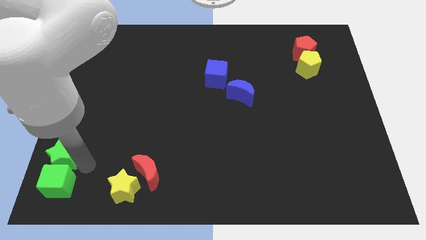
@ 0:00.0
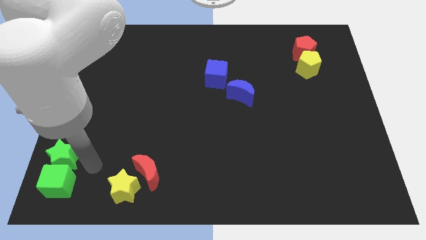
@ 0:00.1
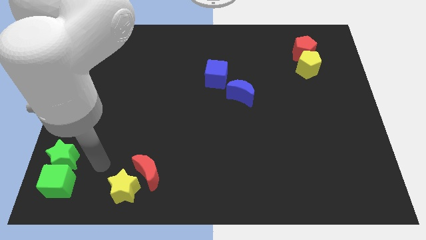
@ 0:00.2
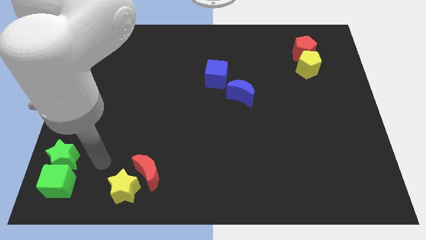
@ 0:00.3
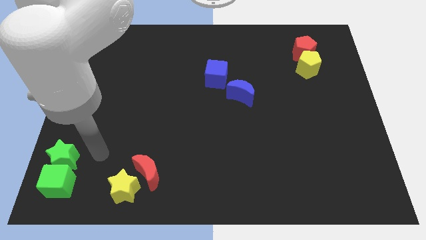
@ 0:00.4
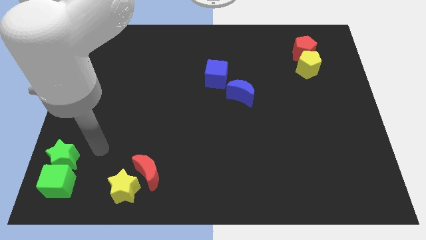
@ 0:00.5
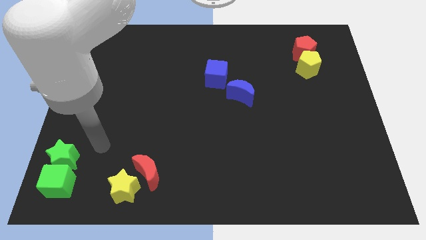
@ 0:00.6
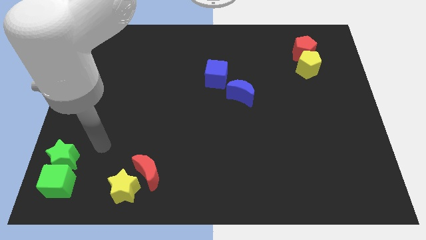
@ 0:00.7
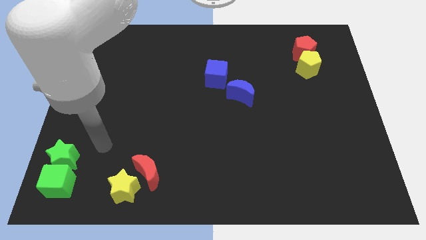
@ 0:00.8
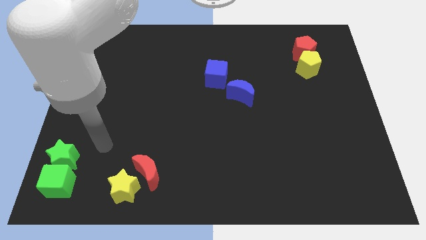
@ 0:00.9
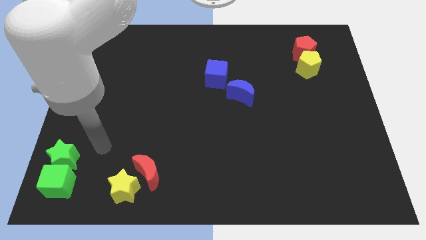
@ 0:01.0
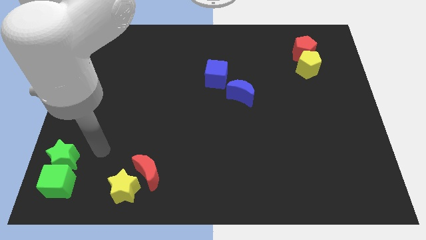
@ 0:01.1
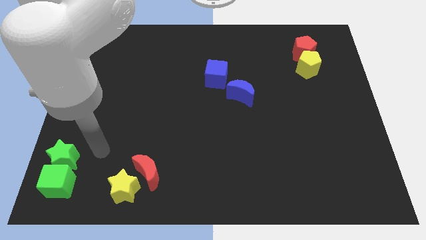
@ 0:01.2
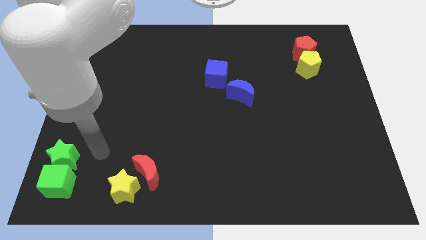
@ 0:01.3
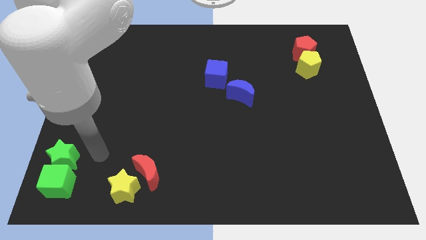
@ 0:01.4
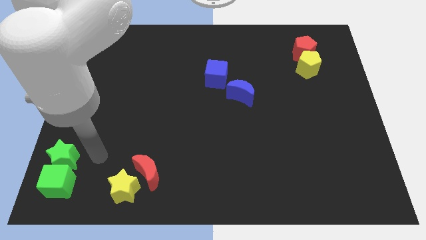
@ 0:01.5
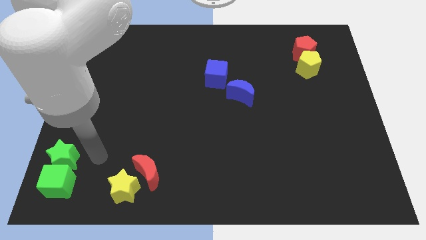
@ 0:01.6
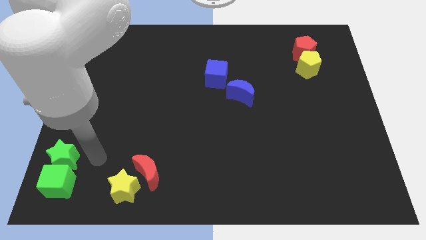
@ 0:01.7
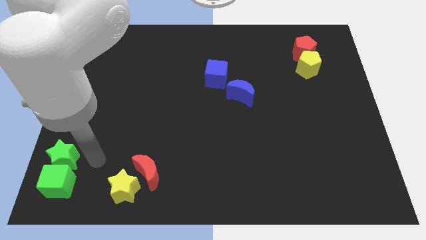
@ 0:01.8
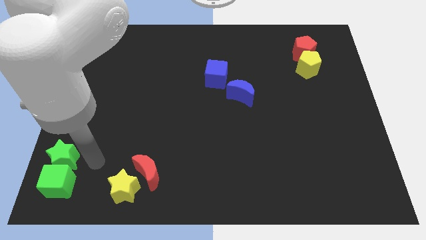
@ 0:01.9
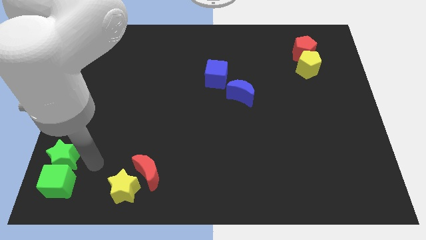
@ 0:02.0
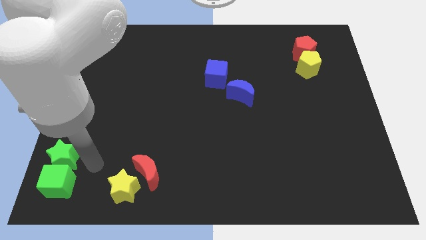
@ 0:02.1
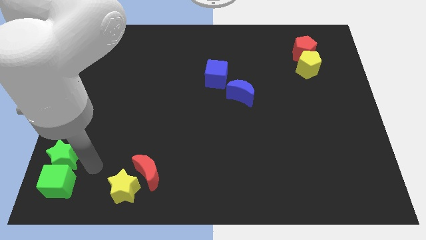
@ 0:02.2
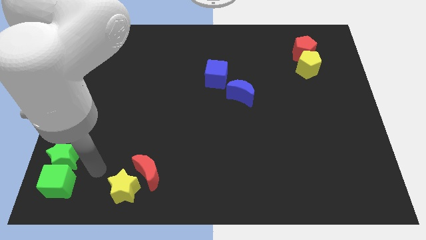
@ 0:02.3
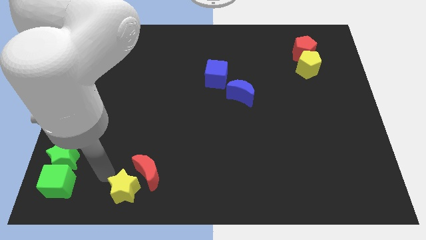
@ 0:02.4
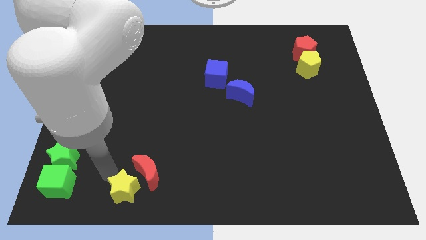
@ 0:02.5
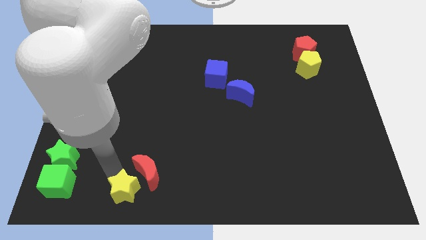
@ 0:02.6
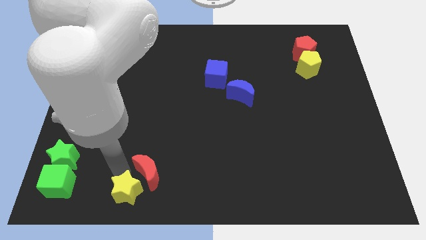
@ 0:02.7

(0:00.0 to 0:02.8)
tap the top left of the yellow star

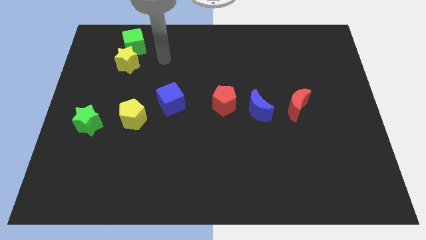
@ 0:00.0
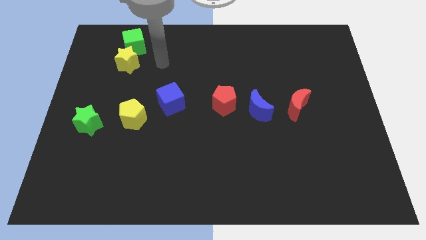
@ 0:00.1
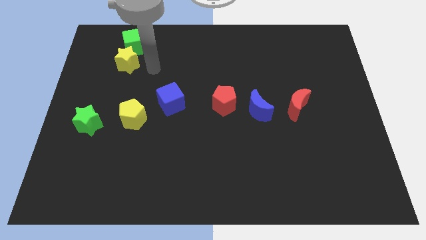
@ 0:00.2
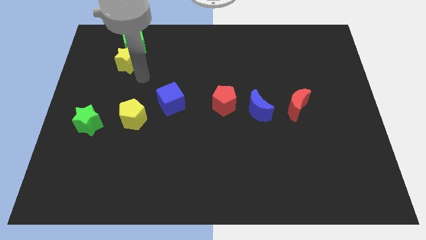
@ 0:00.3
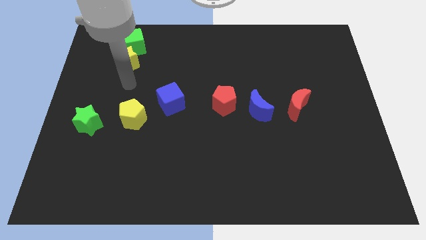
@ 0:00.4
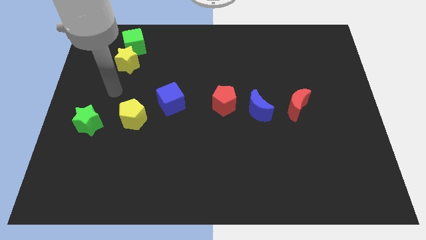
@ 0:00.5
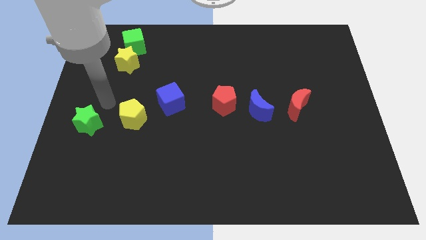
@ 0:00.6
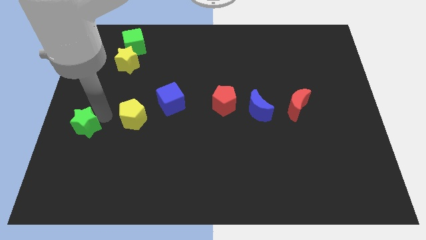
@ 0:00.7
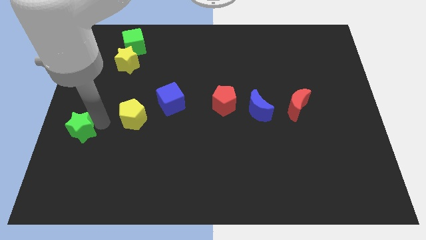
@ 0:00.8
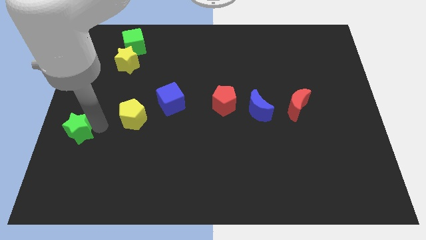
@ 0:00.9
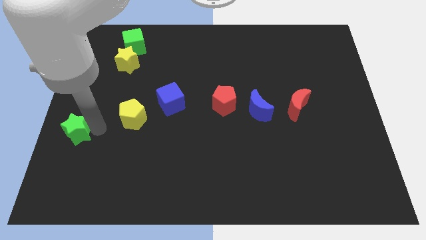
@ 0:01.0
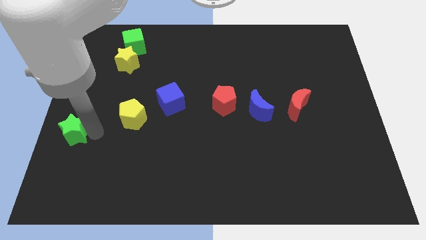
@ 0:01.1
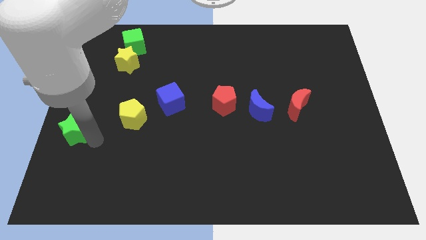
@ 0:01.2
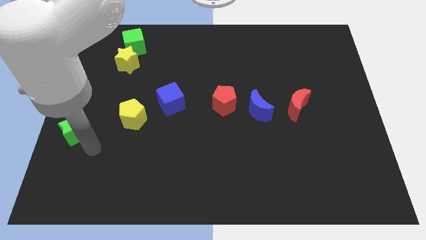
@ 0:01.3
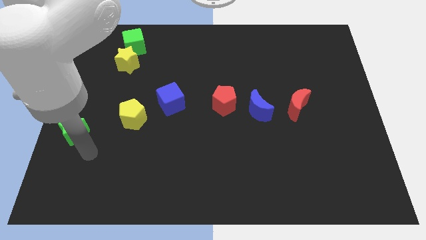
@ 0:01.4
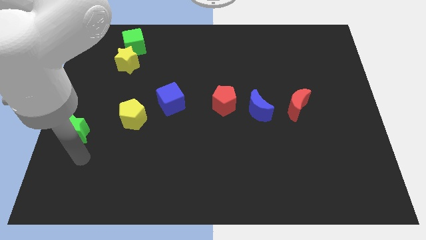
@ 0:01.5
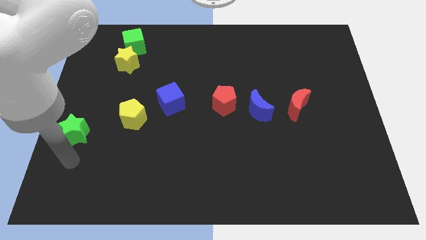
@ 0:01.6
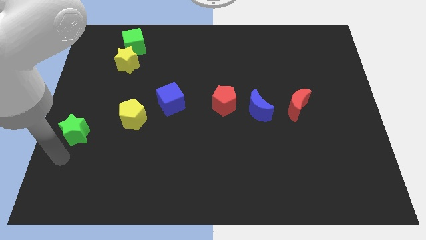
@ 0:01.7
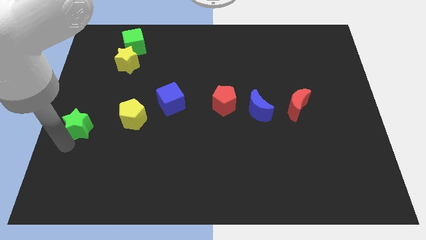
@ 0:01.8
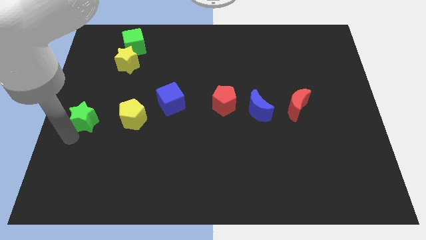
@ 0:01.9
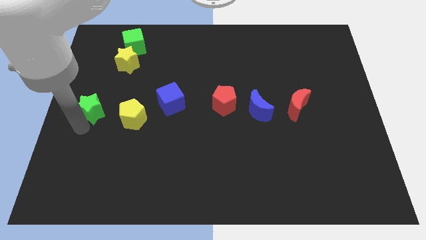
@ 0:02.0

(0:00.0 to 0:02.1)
move the green star left to the yellow pentagon

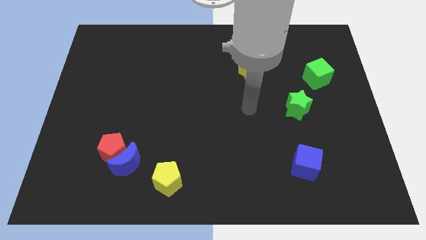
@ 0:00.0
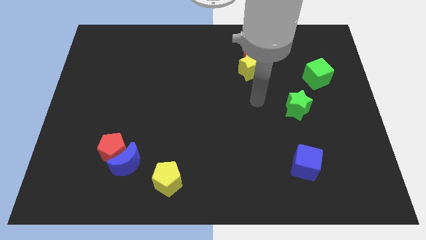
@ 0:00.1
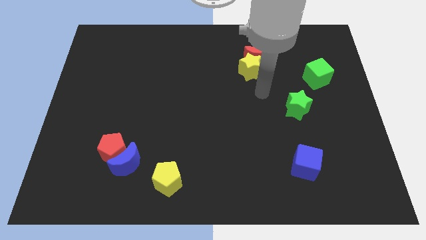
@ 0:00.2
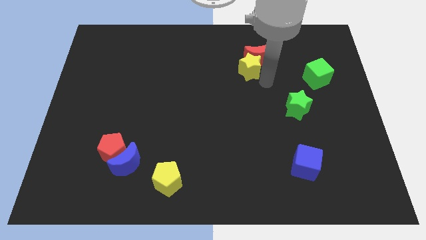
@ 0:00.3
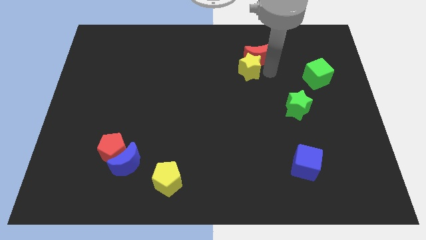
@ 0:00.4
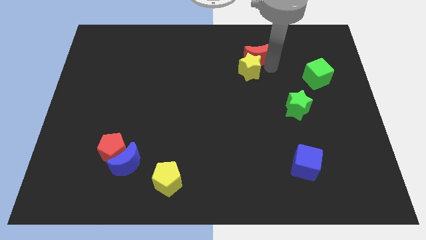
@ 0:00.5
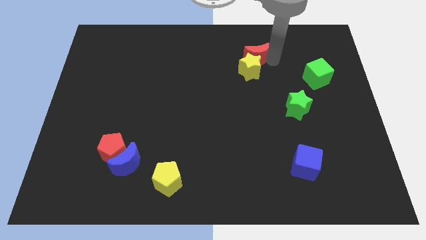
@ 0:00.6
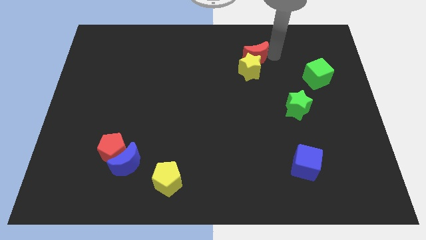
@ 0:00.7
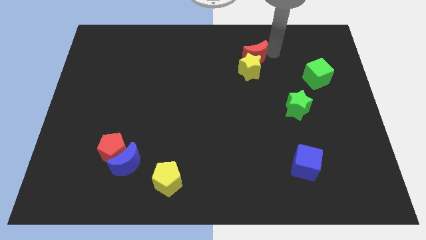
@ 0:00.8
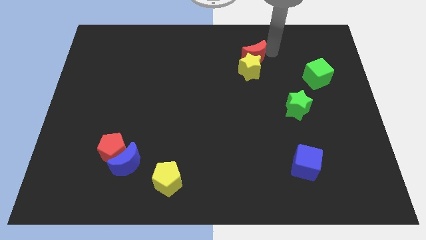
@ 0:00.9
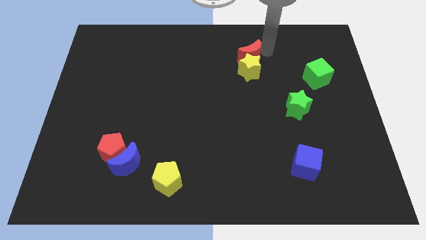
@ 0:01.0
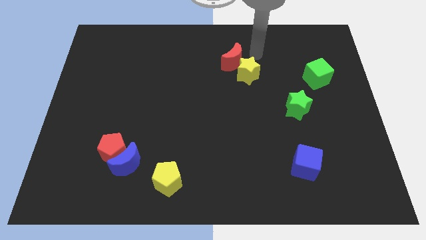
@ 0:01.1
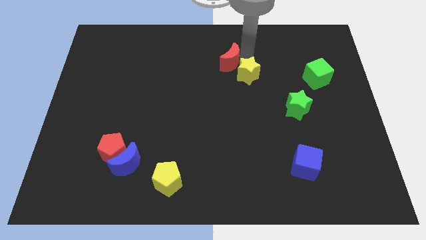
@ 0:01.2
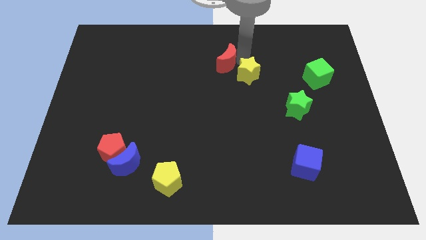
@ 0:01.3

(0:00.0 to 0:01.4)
seperate red moon with yellow star

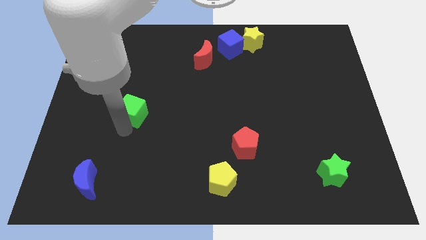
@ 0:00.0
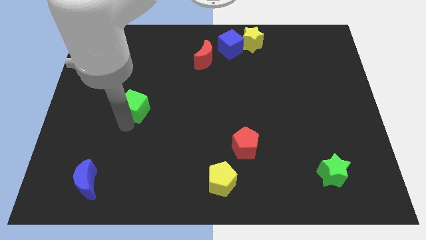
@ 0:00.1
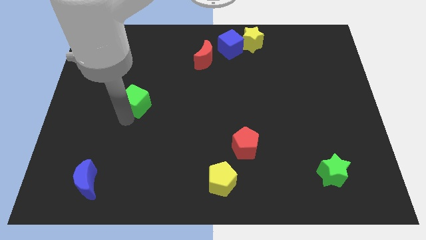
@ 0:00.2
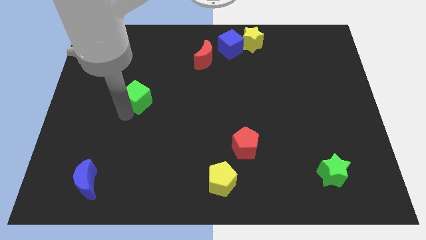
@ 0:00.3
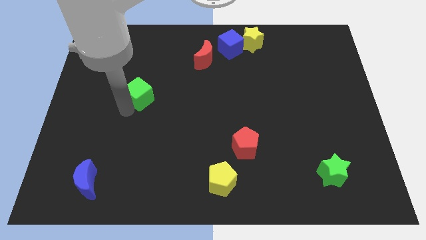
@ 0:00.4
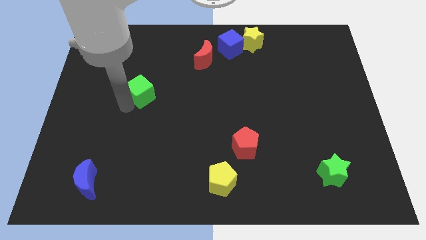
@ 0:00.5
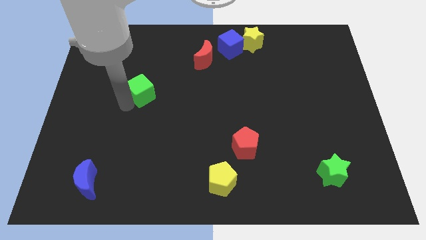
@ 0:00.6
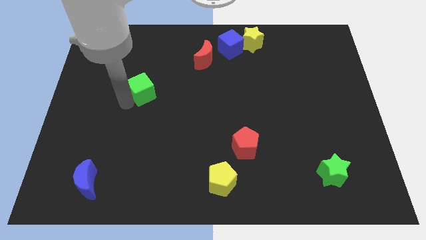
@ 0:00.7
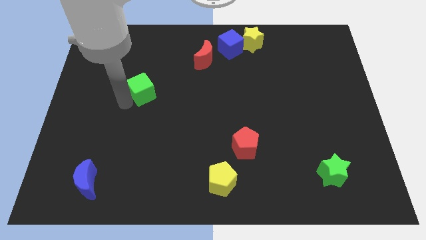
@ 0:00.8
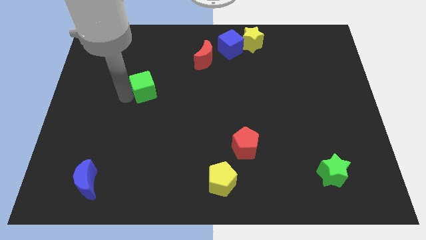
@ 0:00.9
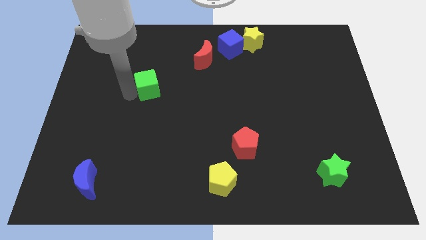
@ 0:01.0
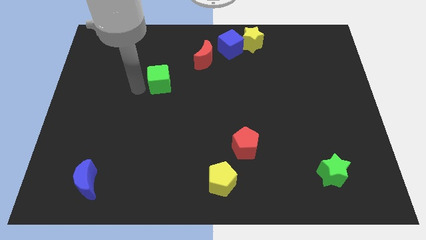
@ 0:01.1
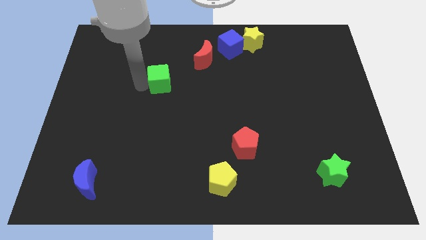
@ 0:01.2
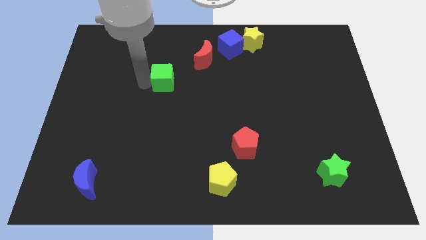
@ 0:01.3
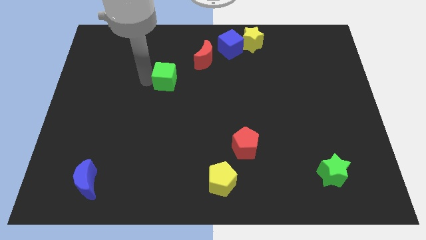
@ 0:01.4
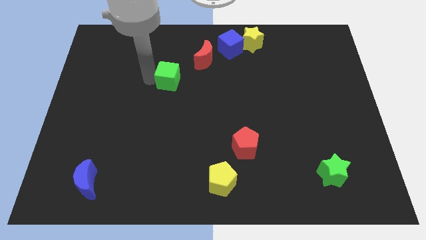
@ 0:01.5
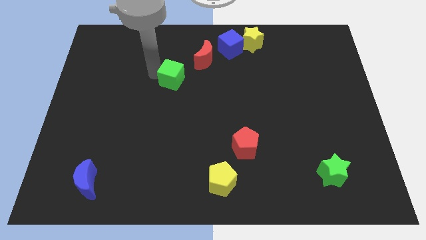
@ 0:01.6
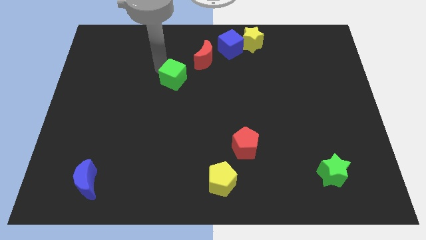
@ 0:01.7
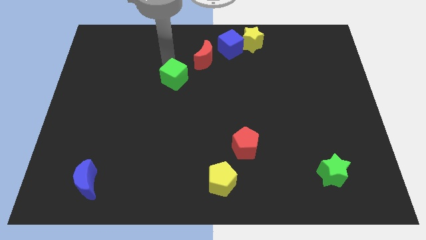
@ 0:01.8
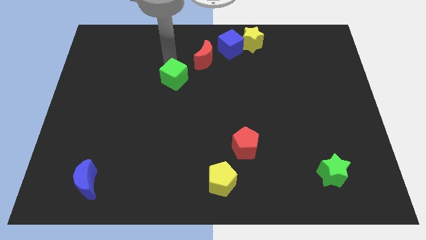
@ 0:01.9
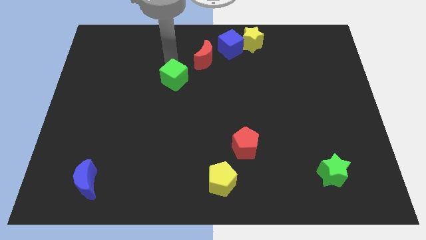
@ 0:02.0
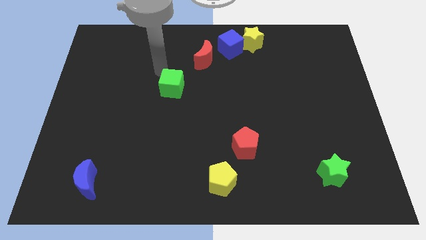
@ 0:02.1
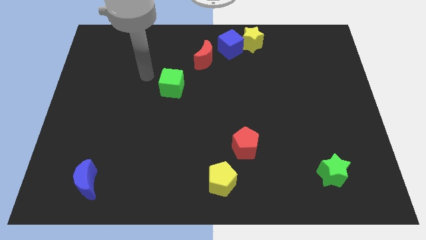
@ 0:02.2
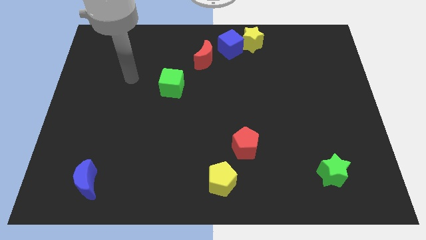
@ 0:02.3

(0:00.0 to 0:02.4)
move the green cube diagonal below red moon

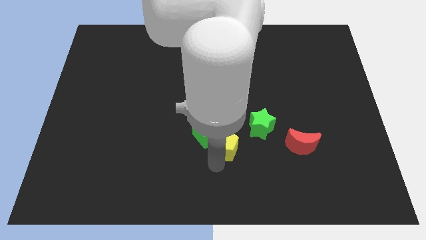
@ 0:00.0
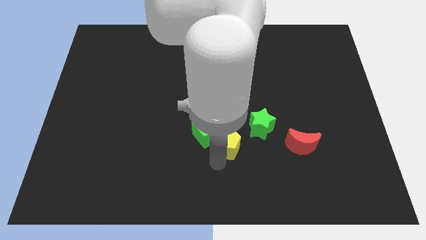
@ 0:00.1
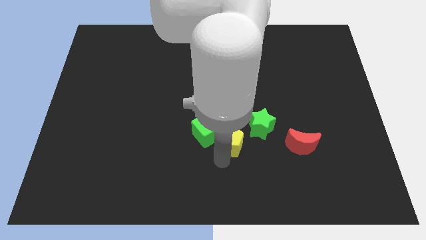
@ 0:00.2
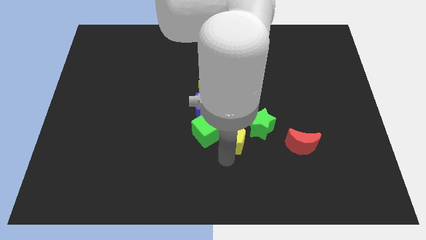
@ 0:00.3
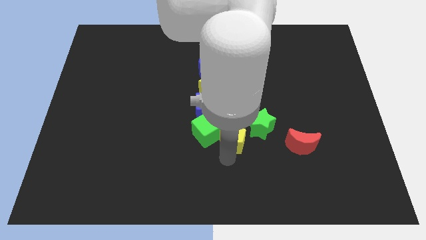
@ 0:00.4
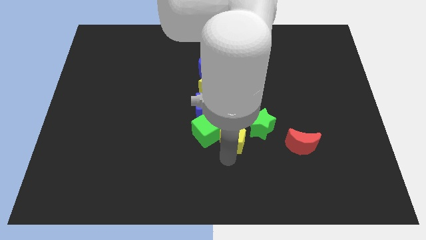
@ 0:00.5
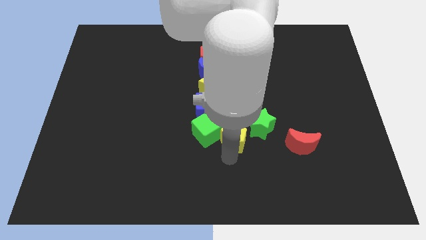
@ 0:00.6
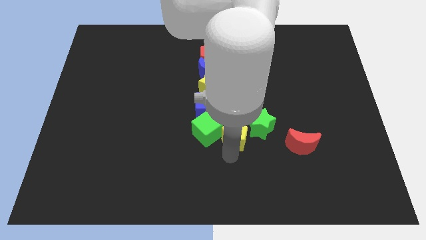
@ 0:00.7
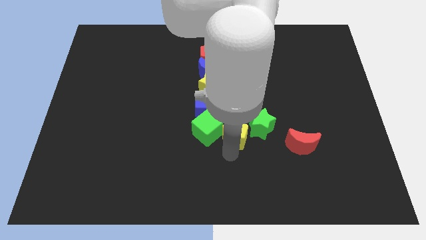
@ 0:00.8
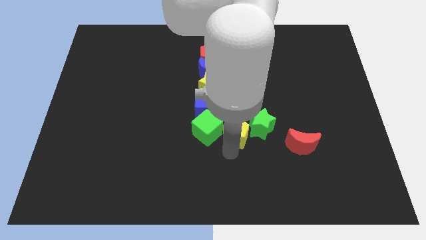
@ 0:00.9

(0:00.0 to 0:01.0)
move the yellow pentagon slightly up
